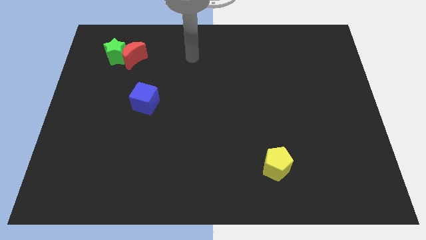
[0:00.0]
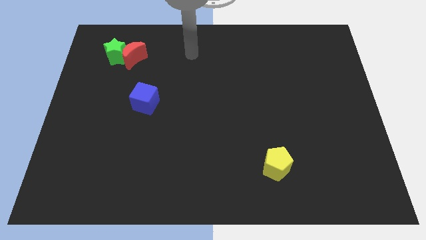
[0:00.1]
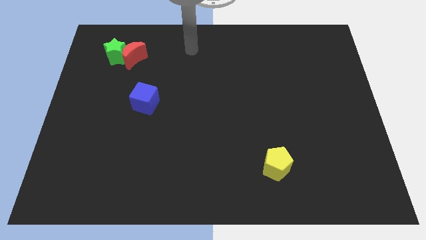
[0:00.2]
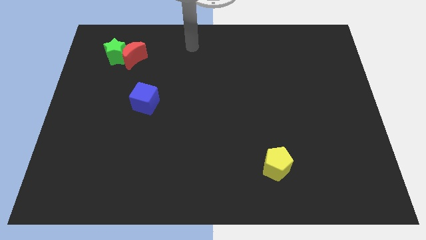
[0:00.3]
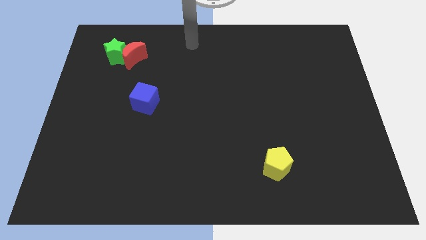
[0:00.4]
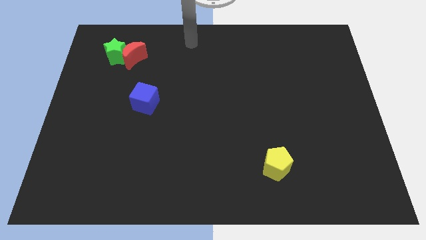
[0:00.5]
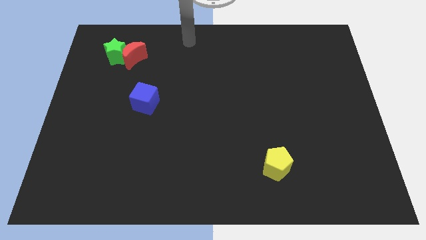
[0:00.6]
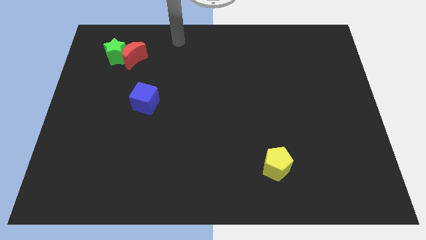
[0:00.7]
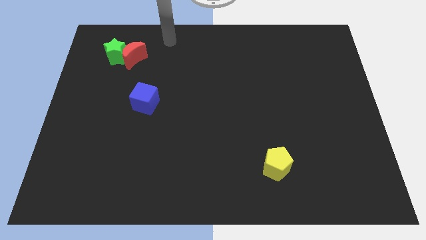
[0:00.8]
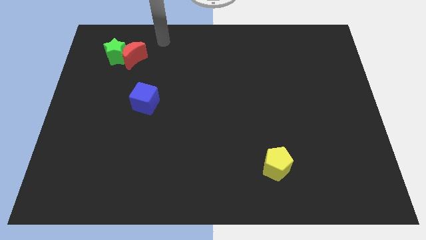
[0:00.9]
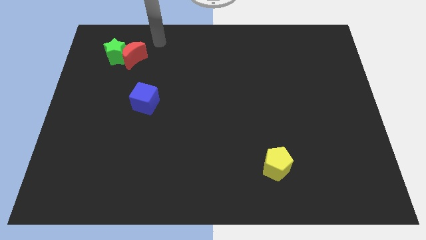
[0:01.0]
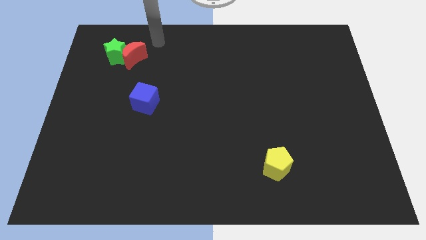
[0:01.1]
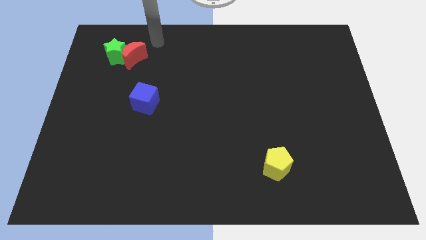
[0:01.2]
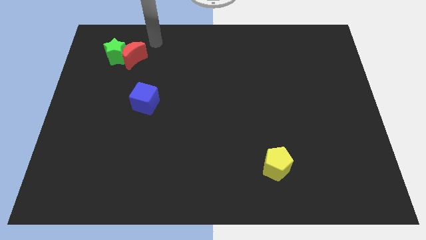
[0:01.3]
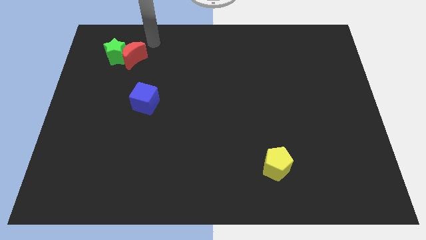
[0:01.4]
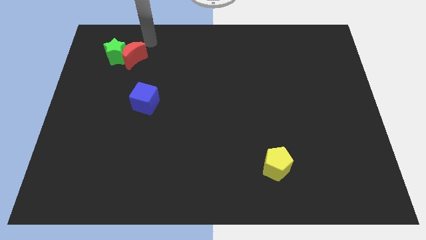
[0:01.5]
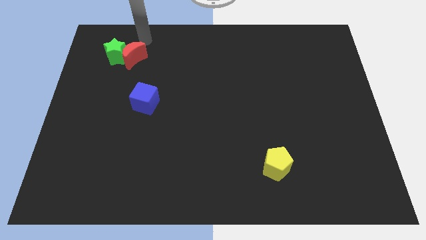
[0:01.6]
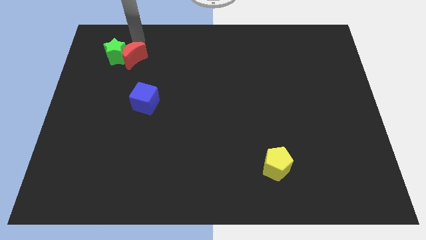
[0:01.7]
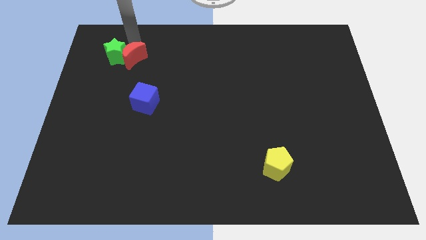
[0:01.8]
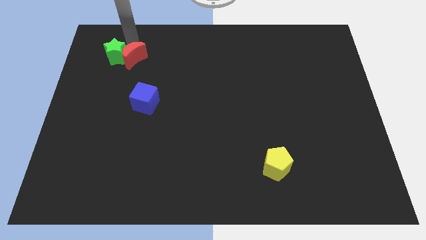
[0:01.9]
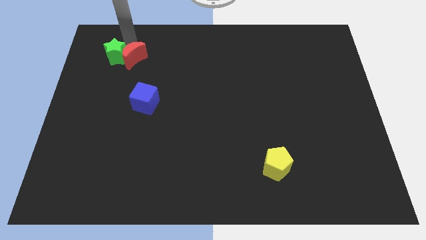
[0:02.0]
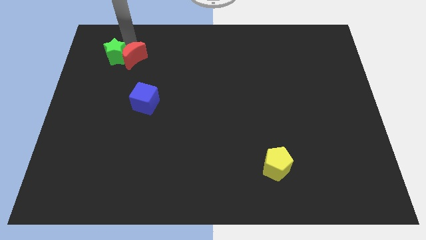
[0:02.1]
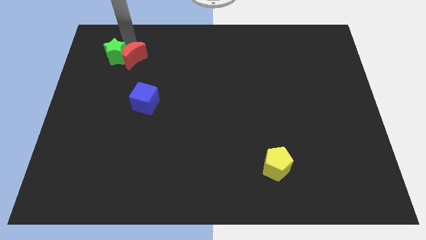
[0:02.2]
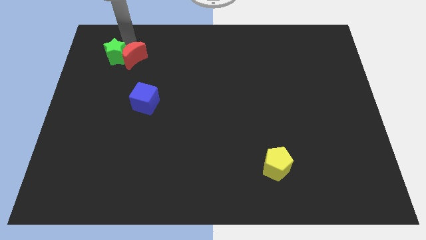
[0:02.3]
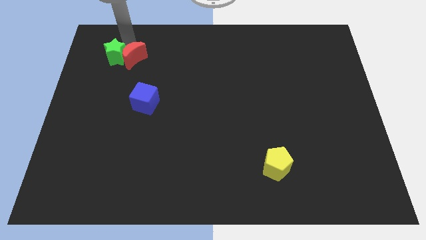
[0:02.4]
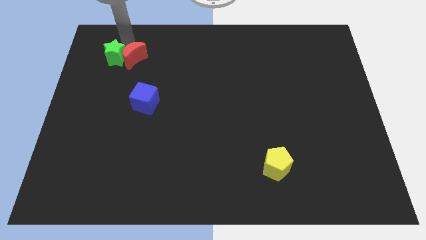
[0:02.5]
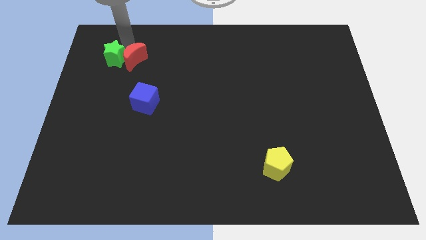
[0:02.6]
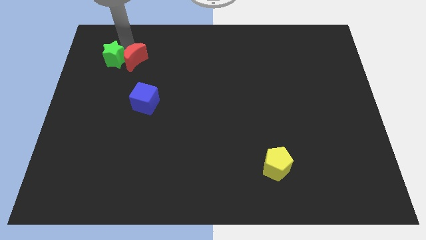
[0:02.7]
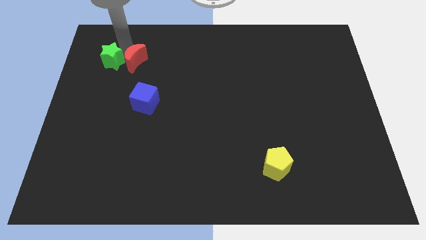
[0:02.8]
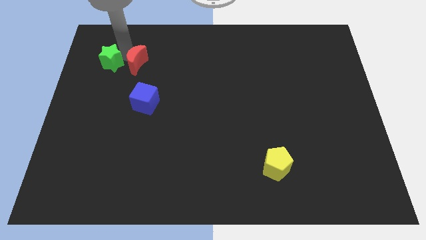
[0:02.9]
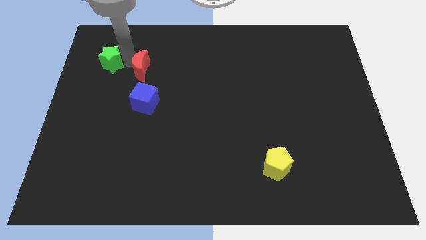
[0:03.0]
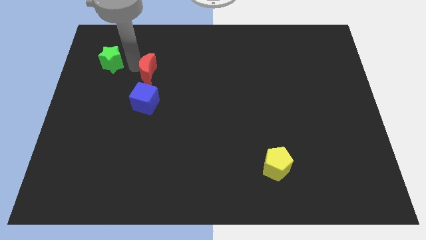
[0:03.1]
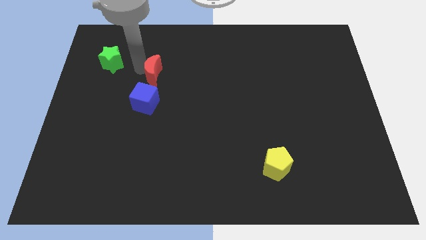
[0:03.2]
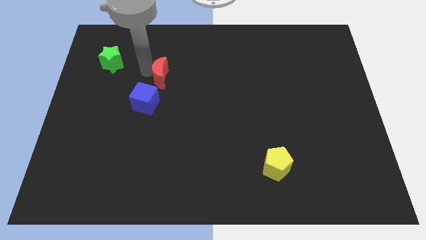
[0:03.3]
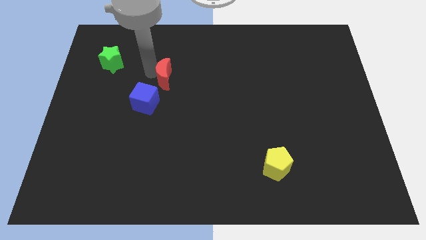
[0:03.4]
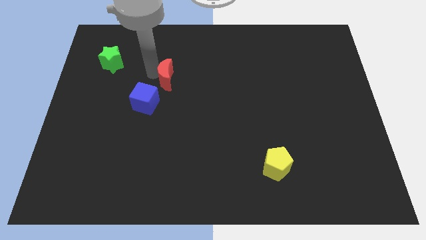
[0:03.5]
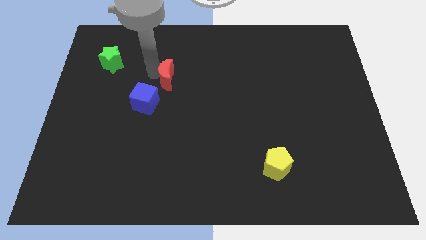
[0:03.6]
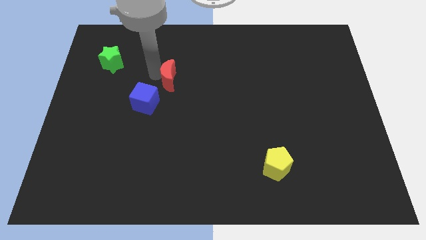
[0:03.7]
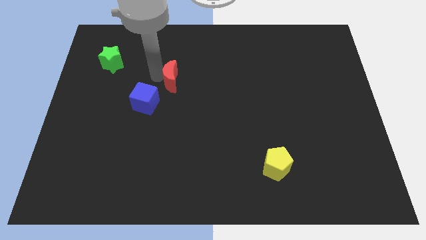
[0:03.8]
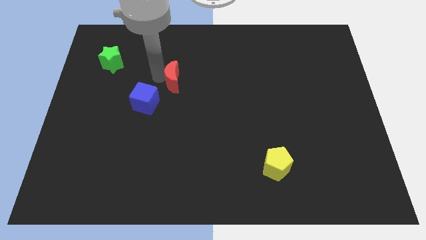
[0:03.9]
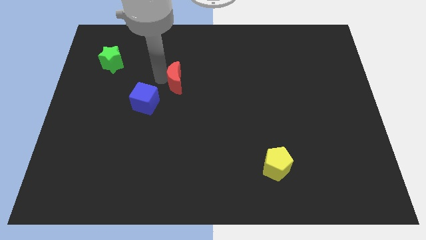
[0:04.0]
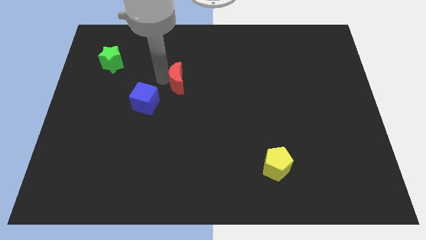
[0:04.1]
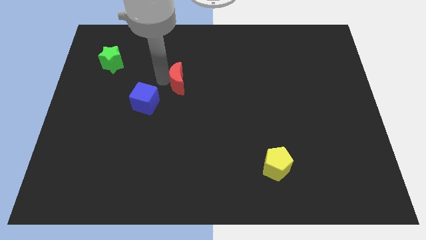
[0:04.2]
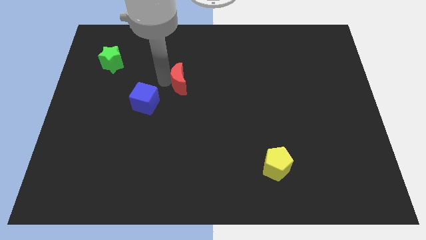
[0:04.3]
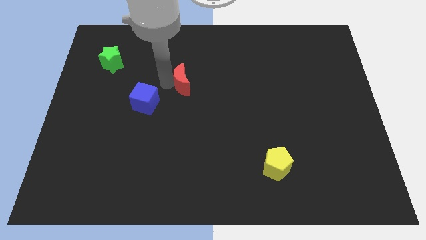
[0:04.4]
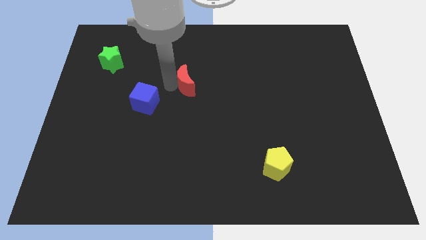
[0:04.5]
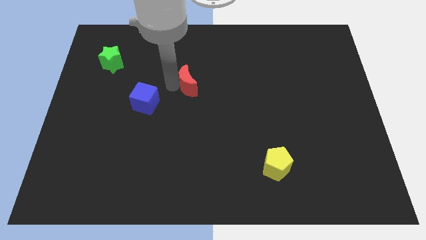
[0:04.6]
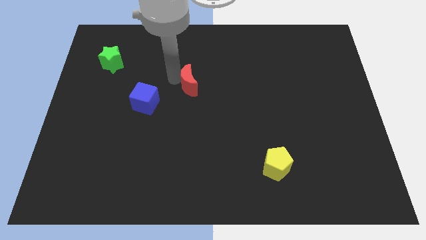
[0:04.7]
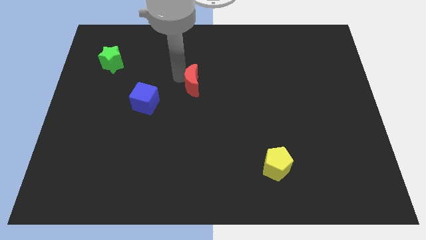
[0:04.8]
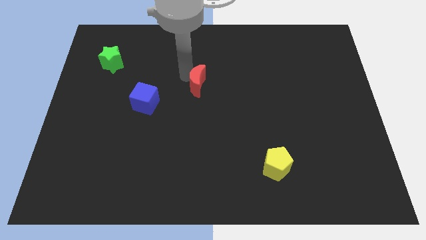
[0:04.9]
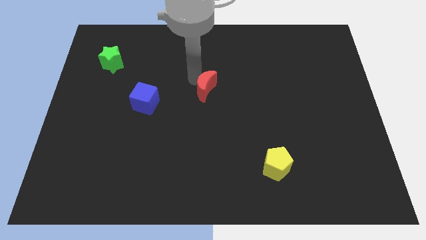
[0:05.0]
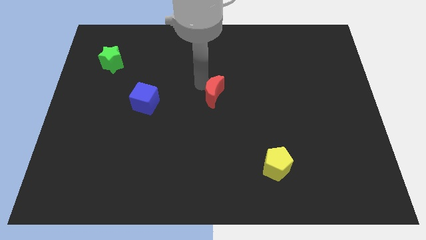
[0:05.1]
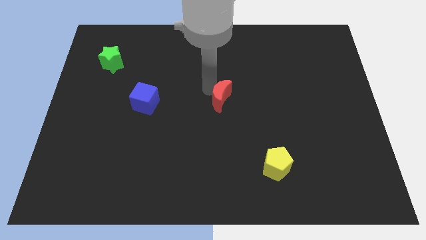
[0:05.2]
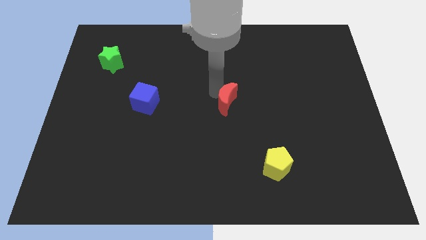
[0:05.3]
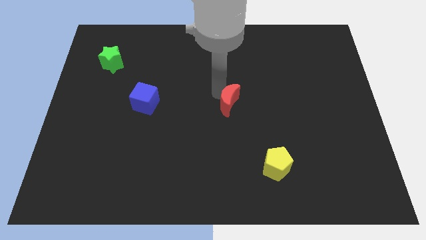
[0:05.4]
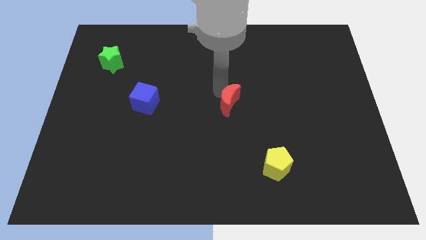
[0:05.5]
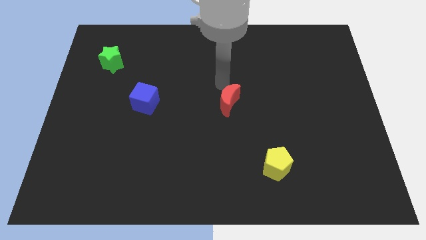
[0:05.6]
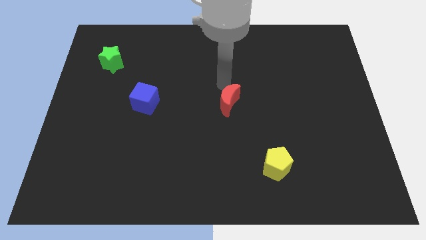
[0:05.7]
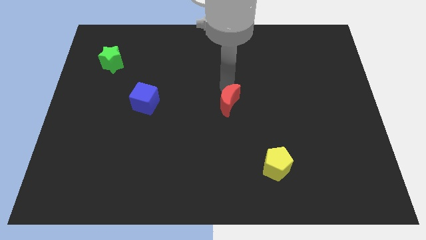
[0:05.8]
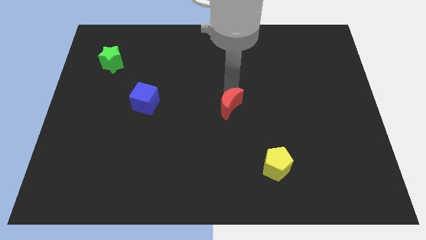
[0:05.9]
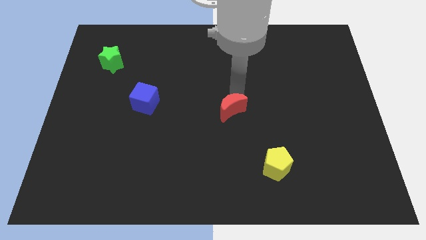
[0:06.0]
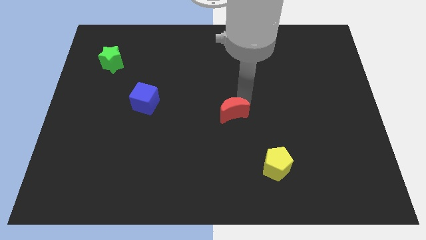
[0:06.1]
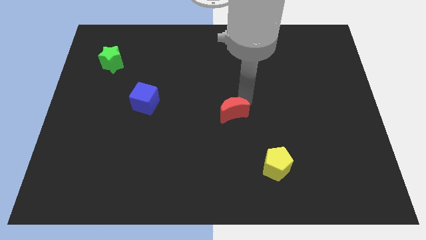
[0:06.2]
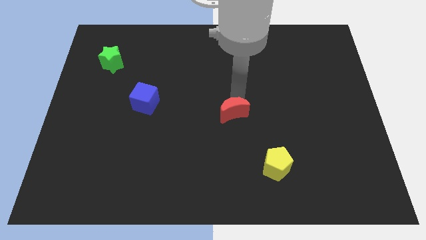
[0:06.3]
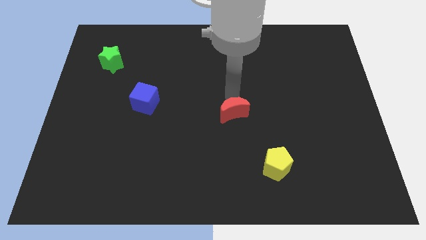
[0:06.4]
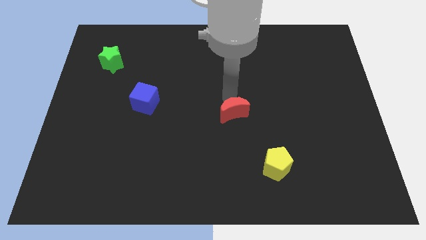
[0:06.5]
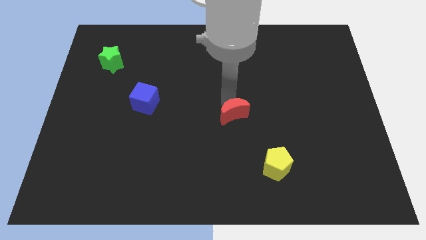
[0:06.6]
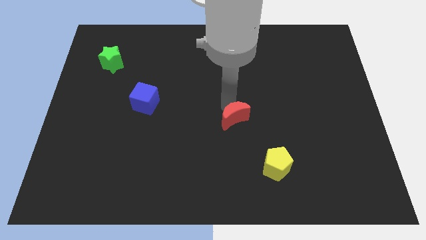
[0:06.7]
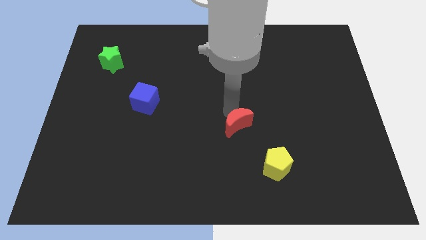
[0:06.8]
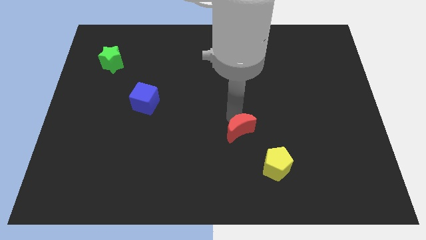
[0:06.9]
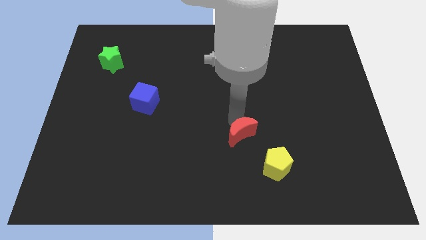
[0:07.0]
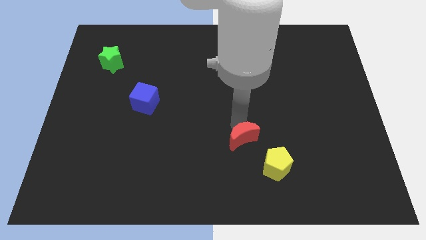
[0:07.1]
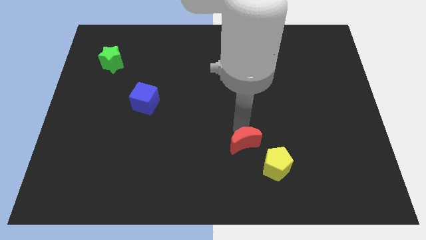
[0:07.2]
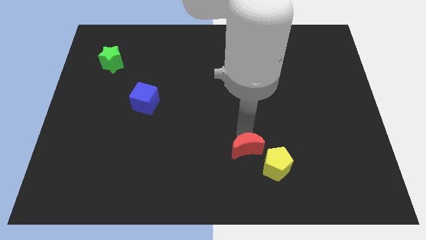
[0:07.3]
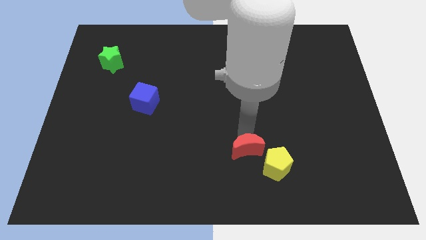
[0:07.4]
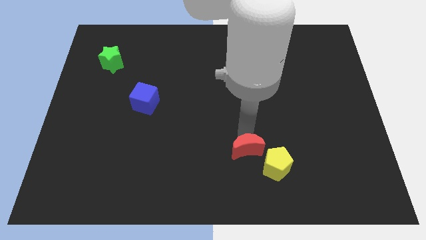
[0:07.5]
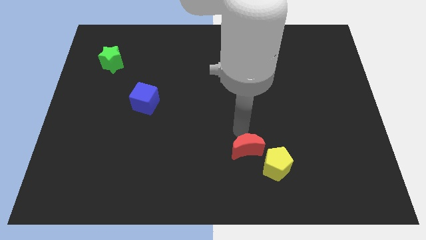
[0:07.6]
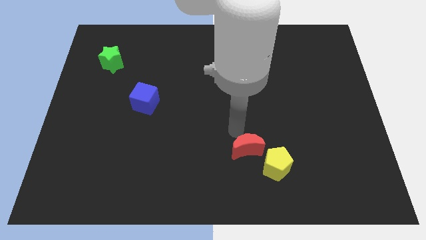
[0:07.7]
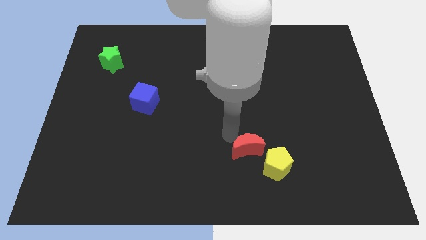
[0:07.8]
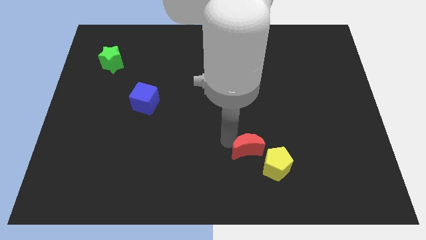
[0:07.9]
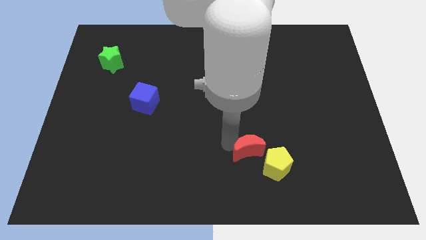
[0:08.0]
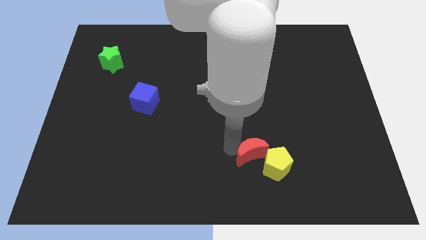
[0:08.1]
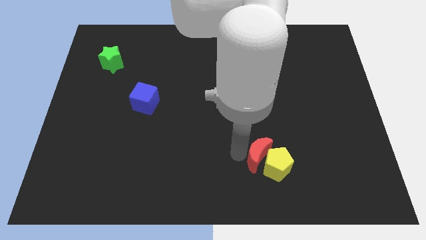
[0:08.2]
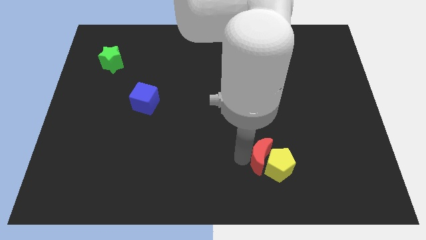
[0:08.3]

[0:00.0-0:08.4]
push the red moon close to the yellow block

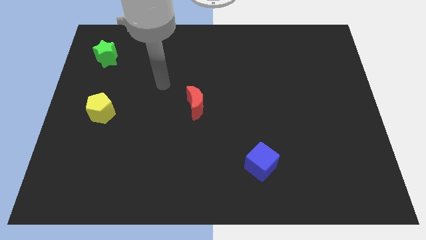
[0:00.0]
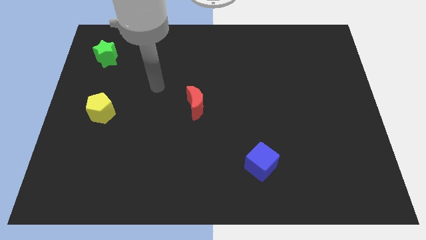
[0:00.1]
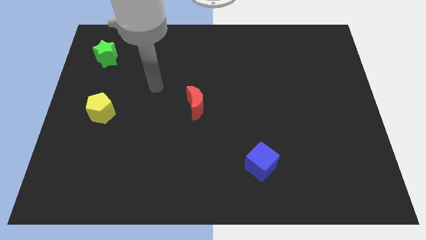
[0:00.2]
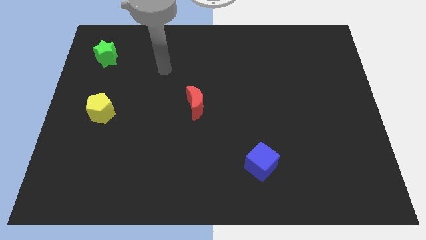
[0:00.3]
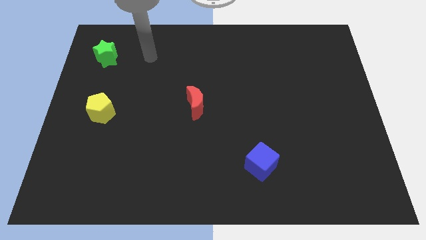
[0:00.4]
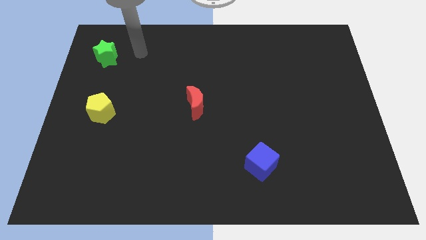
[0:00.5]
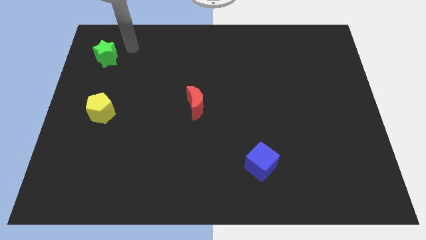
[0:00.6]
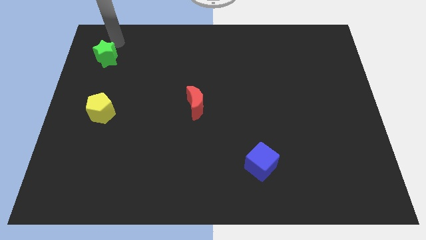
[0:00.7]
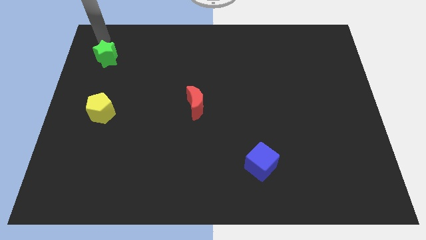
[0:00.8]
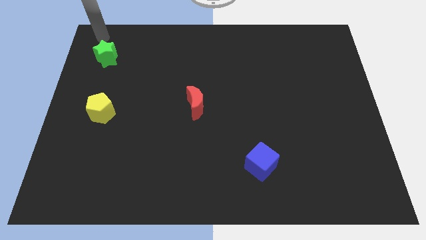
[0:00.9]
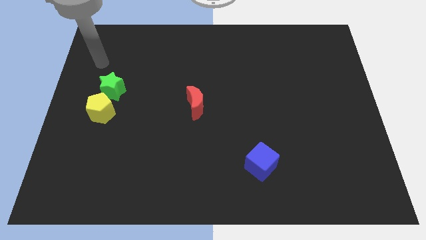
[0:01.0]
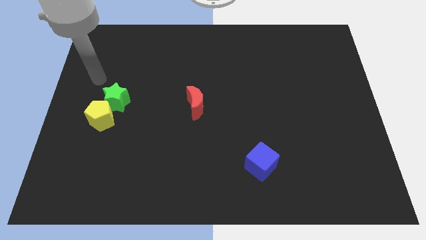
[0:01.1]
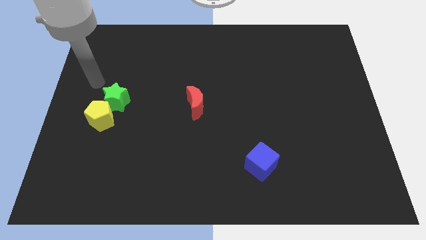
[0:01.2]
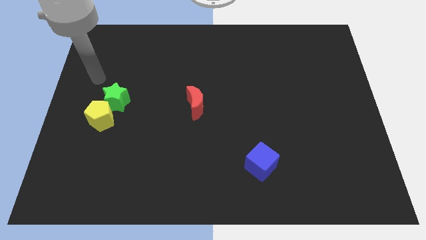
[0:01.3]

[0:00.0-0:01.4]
move the green block next to the yellow block
